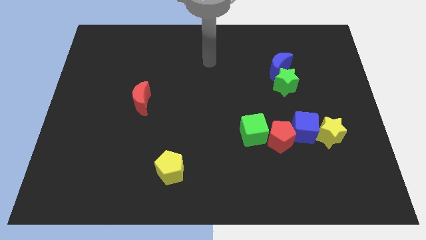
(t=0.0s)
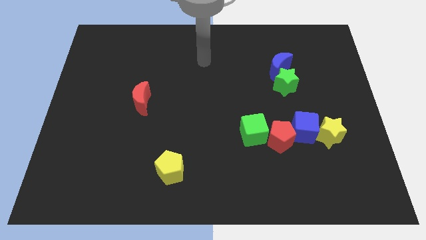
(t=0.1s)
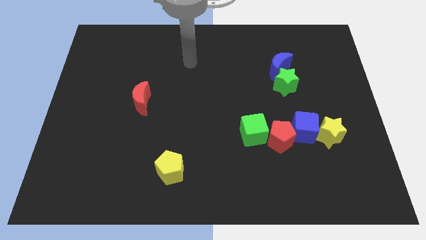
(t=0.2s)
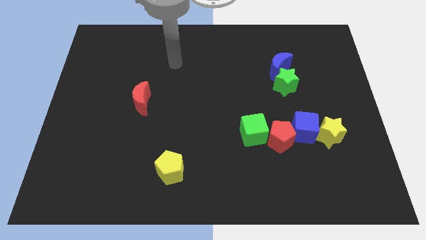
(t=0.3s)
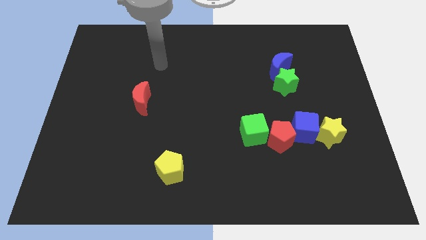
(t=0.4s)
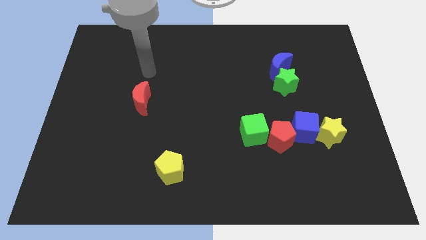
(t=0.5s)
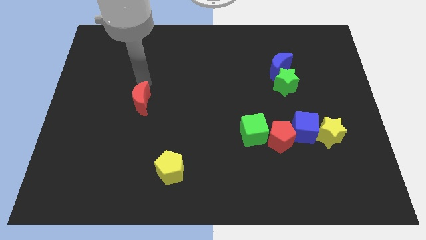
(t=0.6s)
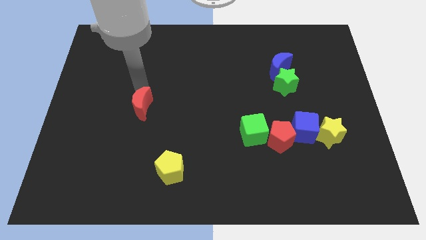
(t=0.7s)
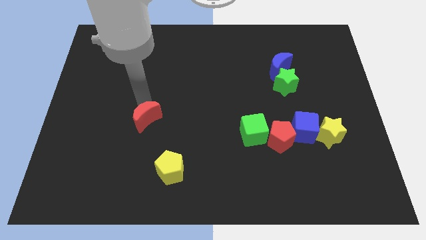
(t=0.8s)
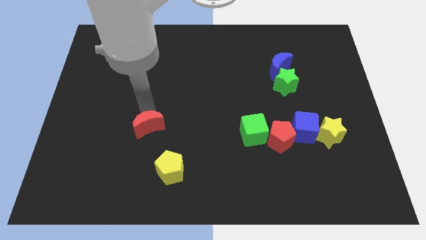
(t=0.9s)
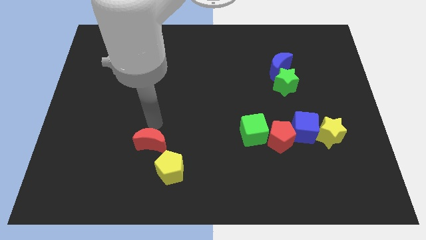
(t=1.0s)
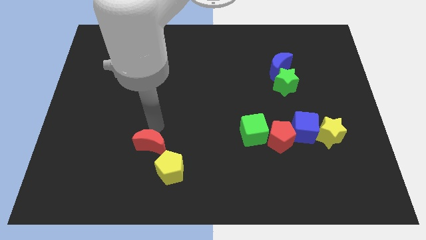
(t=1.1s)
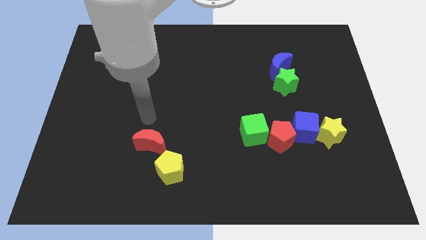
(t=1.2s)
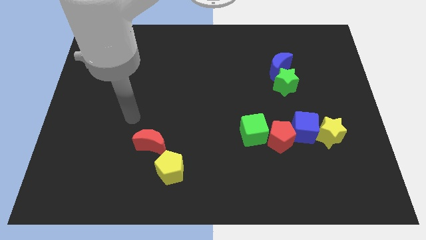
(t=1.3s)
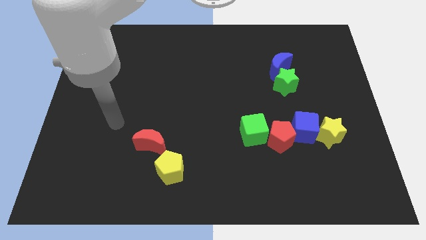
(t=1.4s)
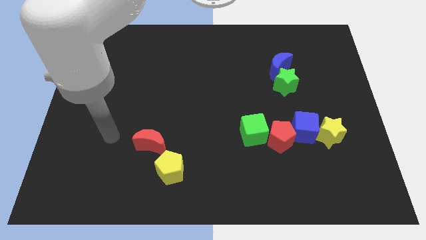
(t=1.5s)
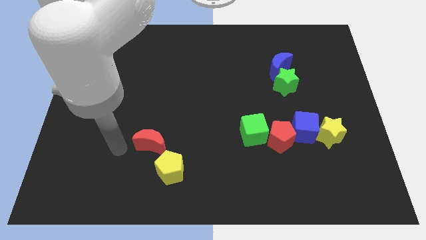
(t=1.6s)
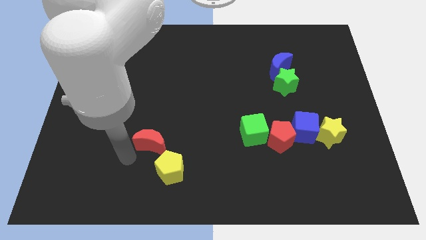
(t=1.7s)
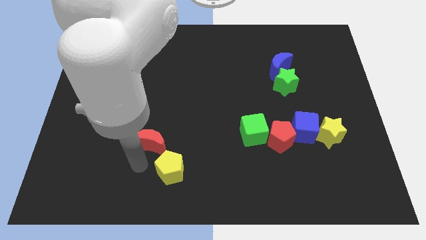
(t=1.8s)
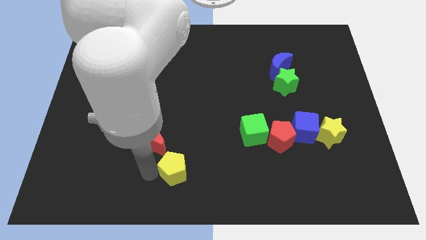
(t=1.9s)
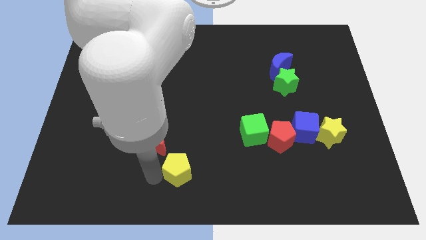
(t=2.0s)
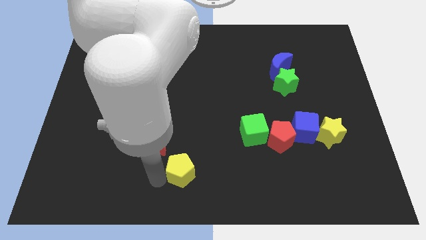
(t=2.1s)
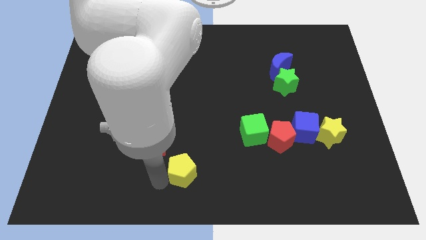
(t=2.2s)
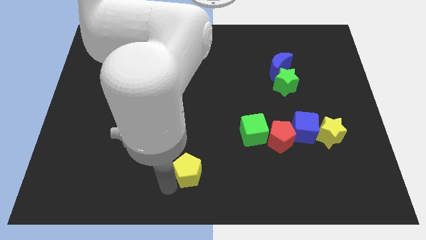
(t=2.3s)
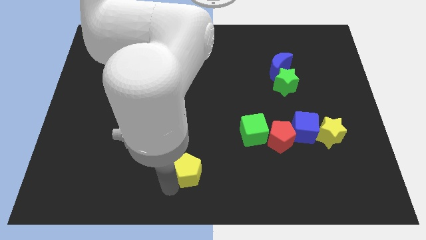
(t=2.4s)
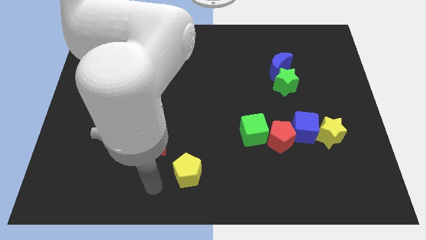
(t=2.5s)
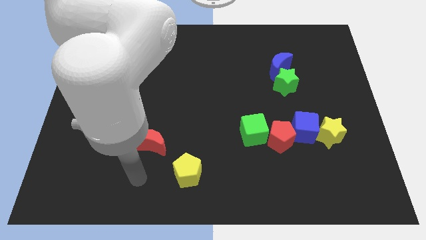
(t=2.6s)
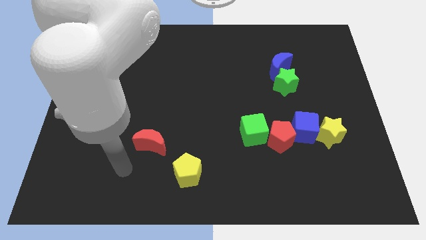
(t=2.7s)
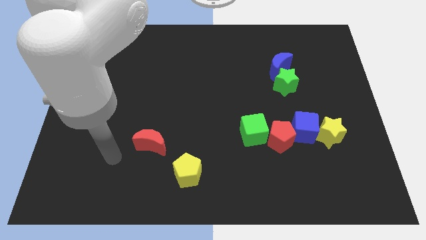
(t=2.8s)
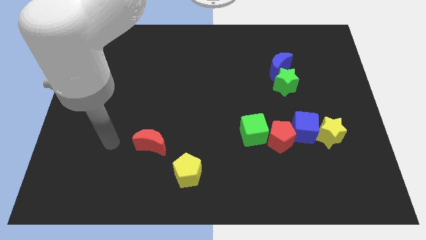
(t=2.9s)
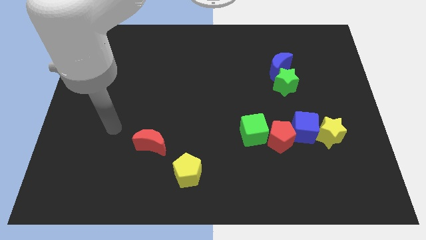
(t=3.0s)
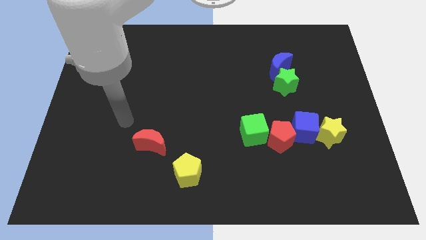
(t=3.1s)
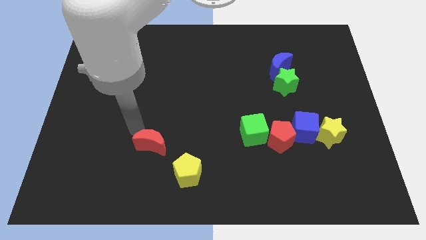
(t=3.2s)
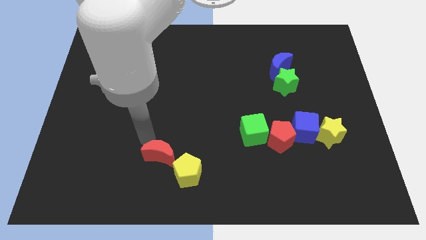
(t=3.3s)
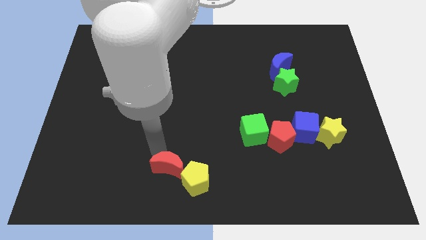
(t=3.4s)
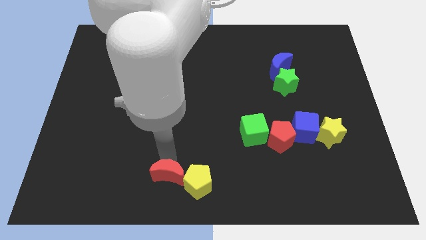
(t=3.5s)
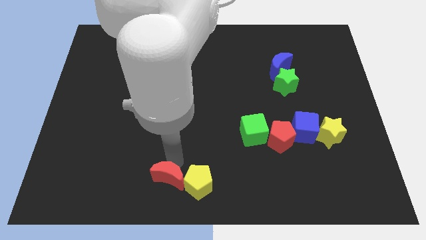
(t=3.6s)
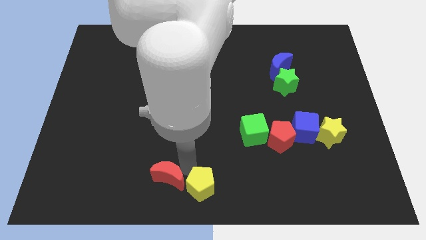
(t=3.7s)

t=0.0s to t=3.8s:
push the yellow pentagon and red crescent towards the bottom center of the table

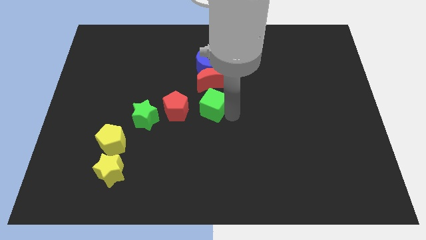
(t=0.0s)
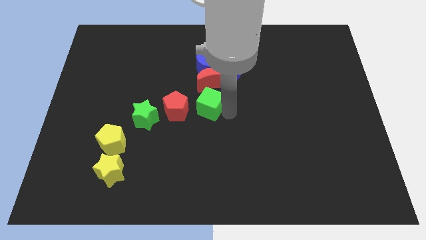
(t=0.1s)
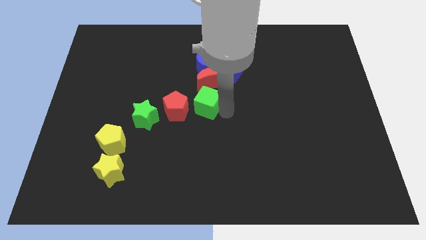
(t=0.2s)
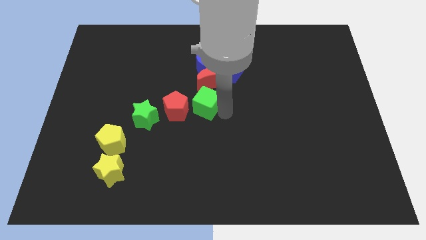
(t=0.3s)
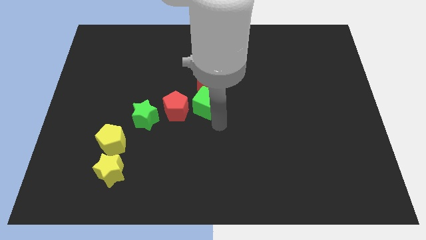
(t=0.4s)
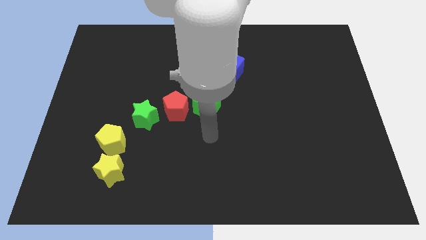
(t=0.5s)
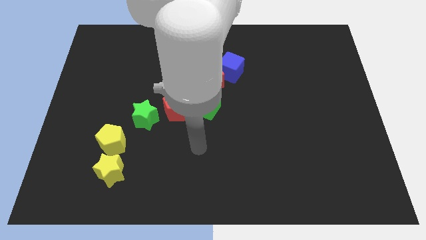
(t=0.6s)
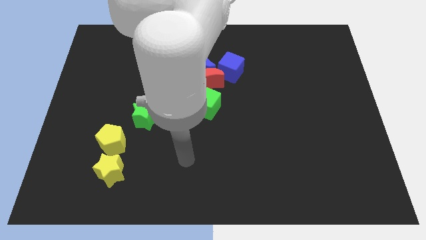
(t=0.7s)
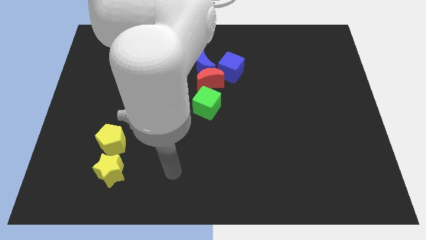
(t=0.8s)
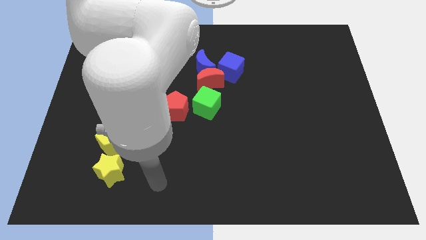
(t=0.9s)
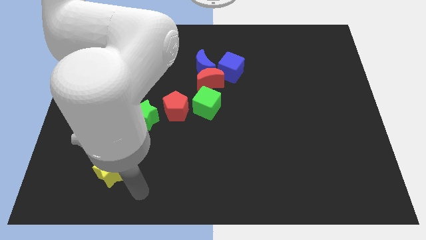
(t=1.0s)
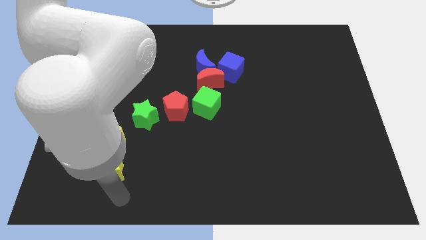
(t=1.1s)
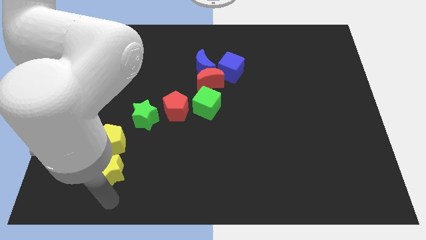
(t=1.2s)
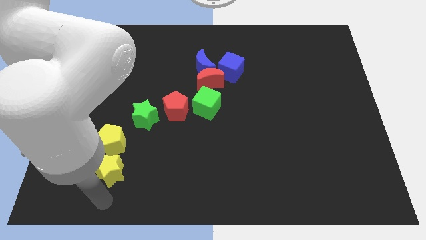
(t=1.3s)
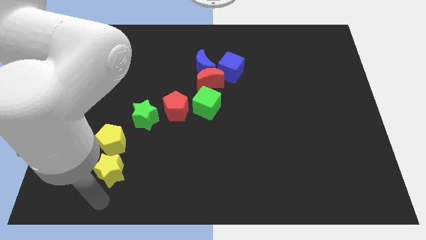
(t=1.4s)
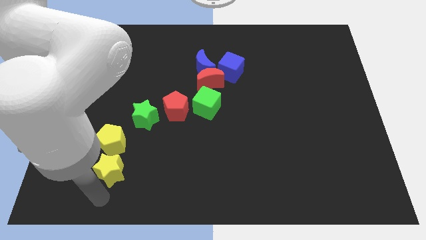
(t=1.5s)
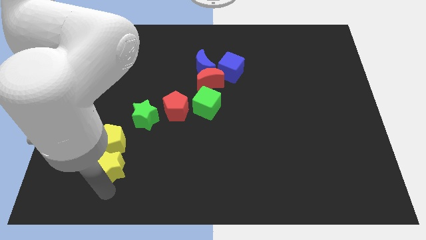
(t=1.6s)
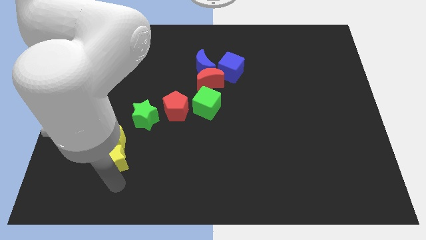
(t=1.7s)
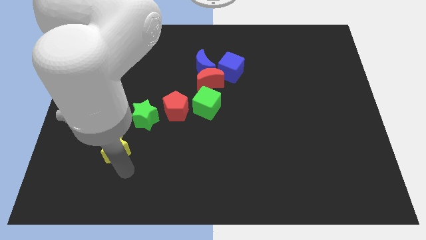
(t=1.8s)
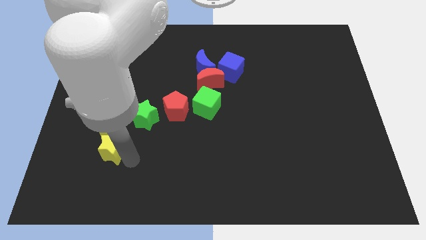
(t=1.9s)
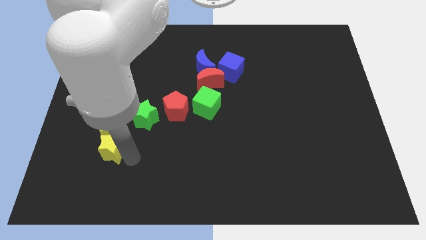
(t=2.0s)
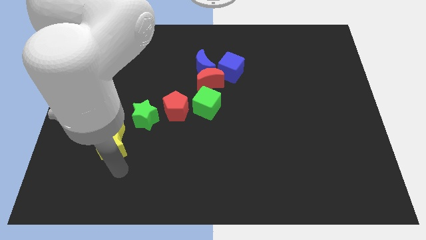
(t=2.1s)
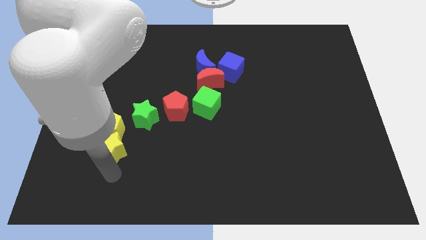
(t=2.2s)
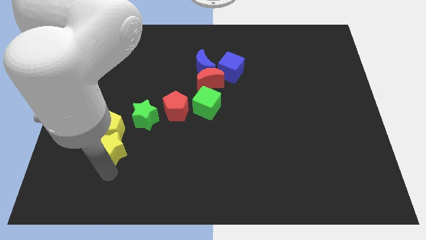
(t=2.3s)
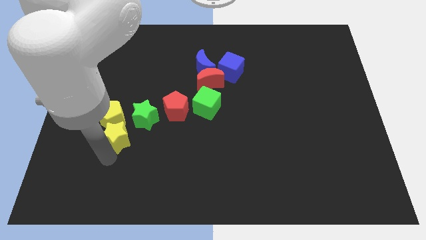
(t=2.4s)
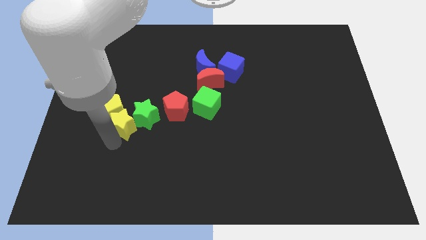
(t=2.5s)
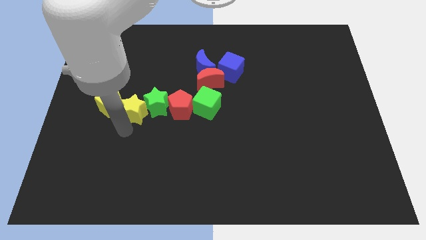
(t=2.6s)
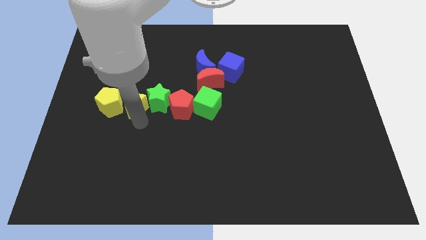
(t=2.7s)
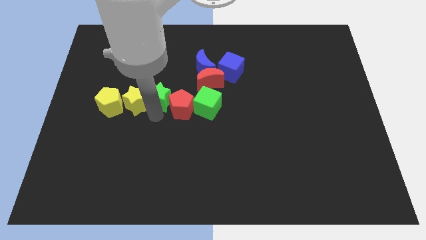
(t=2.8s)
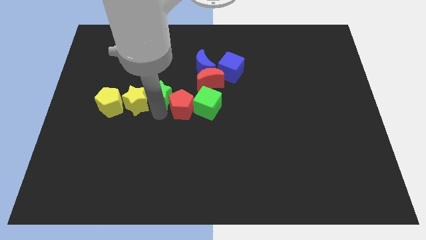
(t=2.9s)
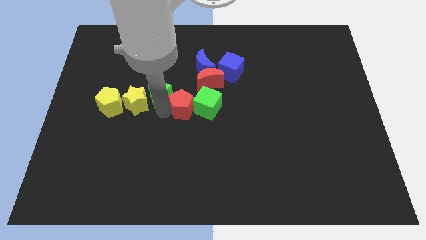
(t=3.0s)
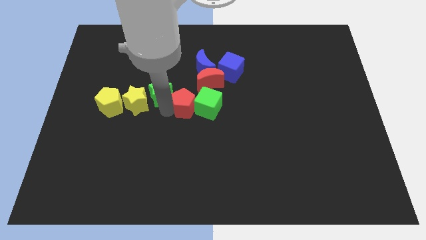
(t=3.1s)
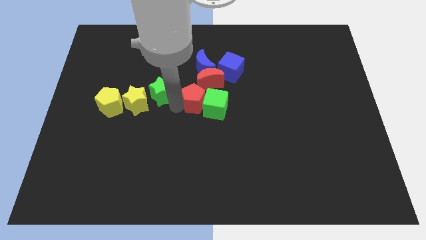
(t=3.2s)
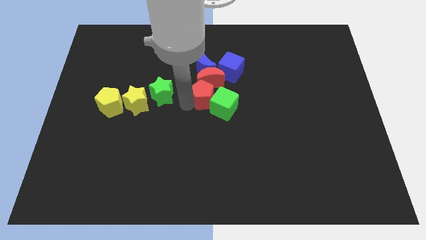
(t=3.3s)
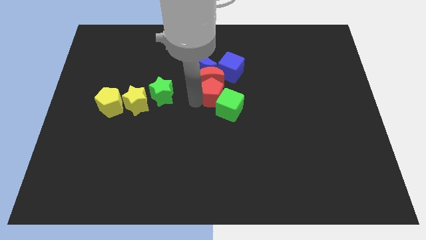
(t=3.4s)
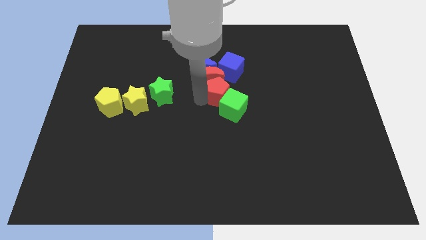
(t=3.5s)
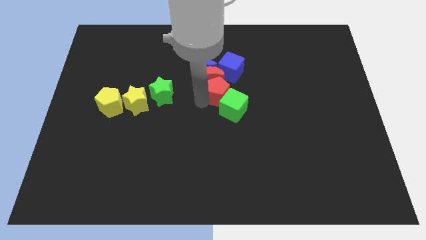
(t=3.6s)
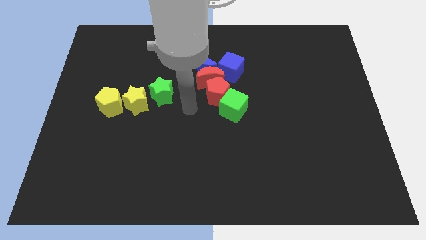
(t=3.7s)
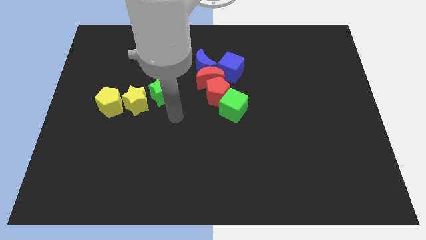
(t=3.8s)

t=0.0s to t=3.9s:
place the green cube towards the bottom left side of the red crescent

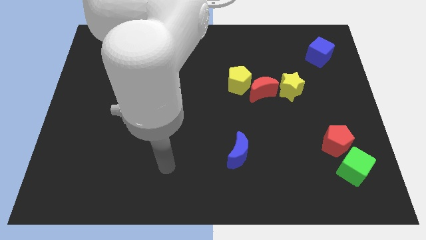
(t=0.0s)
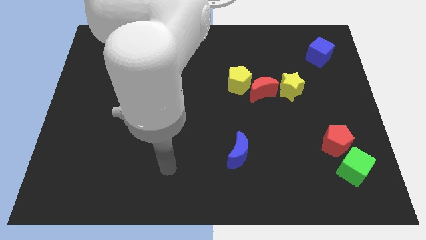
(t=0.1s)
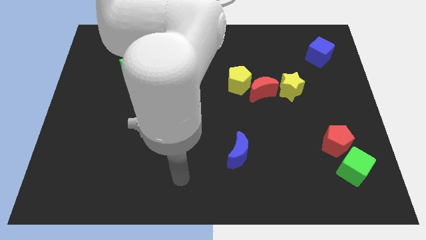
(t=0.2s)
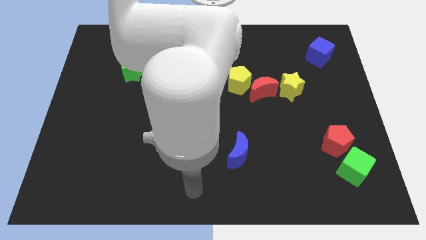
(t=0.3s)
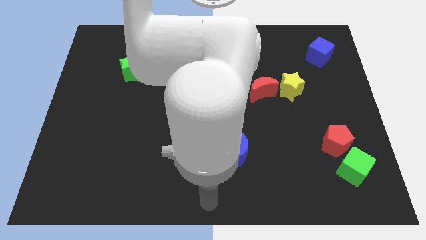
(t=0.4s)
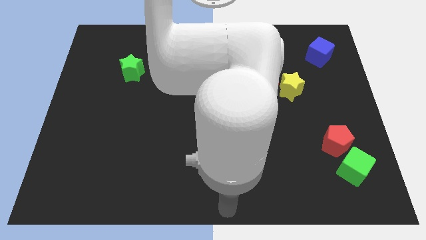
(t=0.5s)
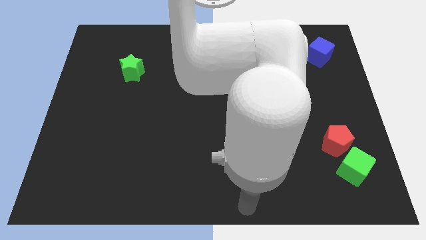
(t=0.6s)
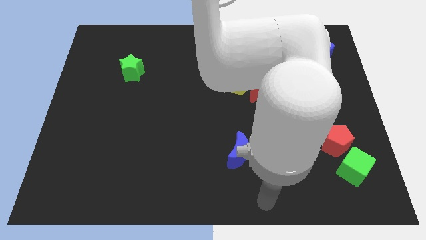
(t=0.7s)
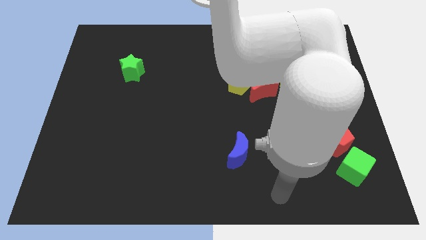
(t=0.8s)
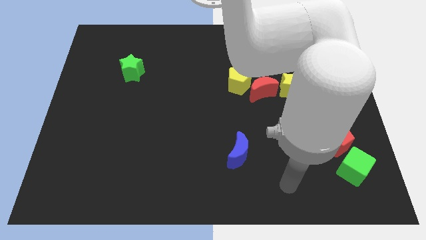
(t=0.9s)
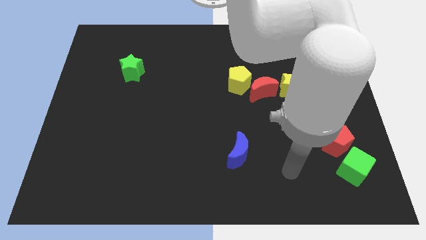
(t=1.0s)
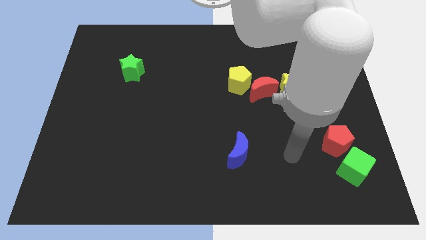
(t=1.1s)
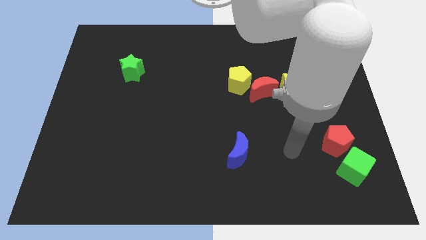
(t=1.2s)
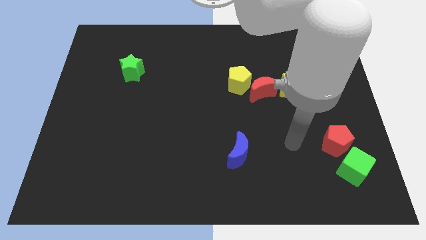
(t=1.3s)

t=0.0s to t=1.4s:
point your arm in between red pentagon and the blue crescent
